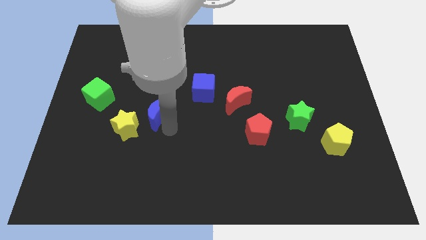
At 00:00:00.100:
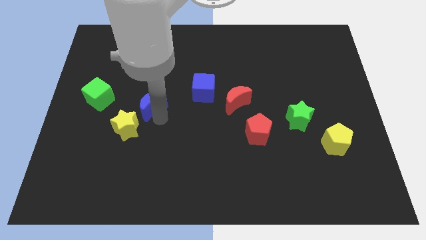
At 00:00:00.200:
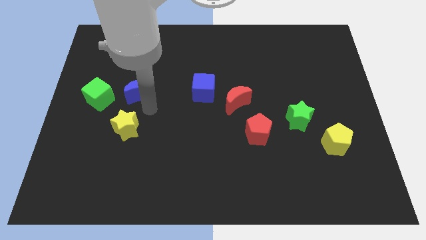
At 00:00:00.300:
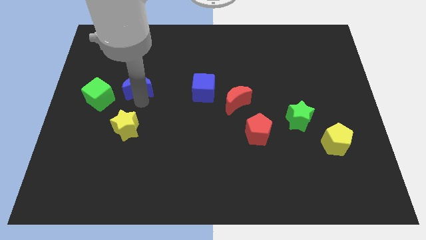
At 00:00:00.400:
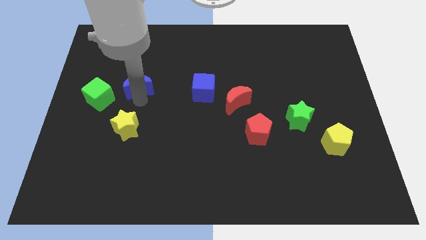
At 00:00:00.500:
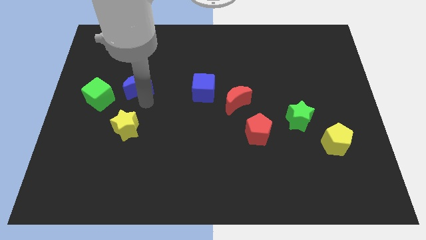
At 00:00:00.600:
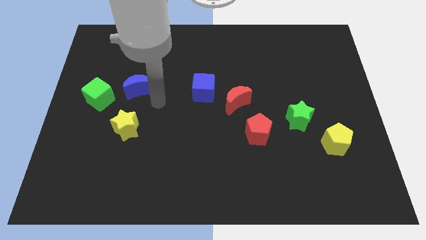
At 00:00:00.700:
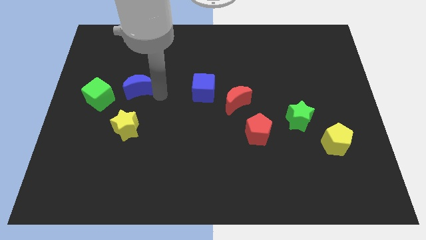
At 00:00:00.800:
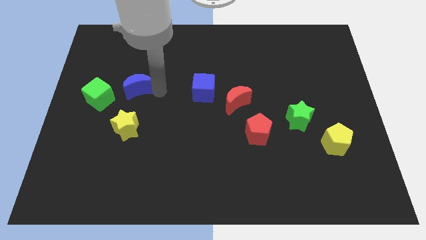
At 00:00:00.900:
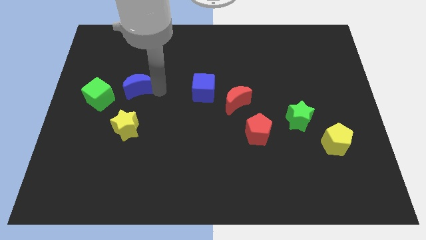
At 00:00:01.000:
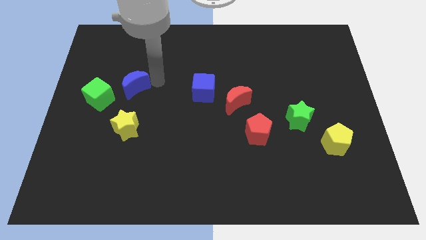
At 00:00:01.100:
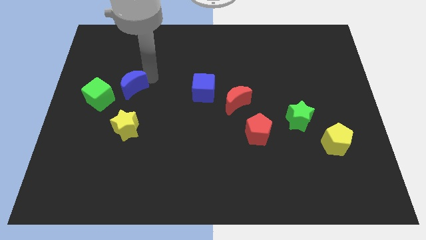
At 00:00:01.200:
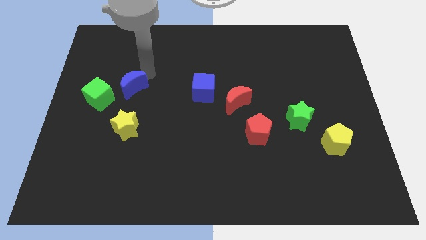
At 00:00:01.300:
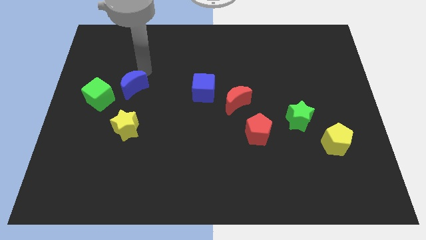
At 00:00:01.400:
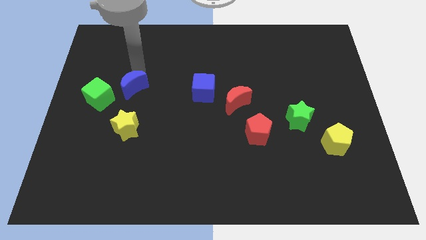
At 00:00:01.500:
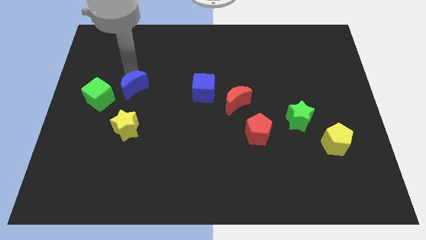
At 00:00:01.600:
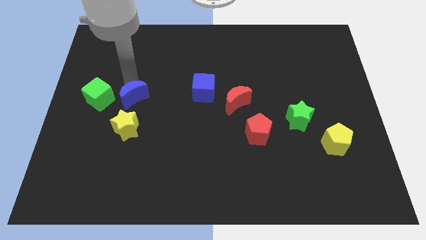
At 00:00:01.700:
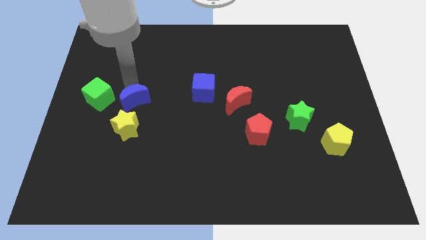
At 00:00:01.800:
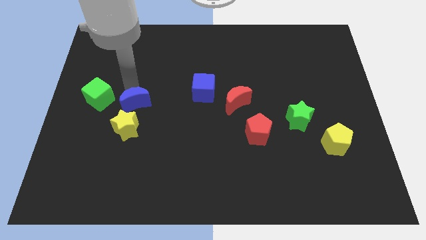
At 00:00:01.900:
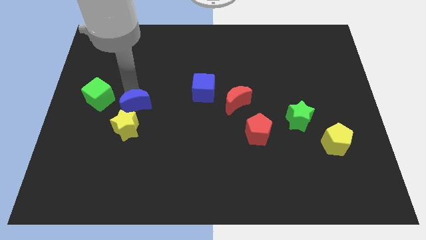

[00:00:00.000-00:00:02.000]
move the blue moon to top of the yellow star

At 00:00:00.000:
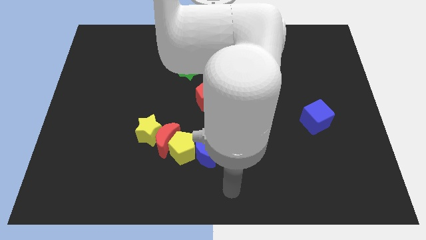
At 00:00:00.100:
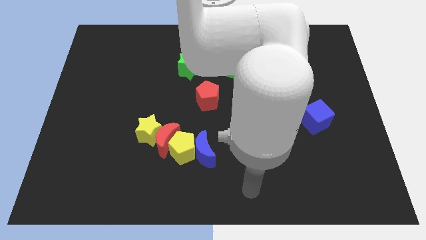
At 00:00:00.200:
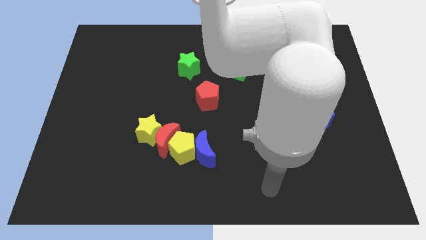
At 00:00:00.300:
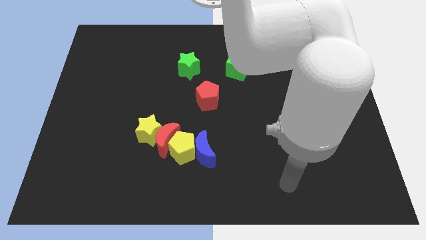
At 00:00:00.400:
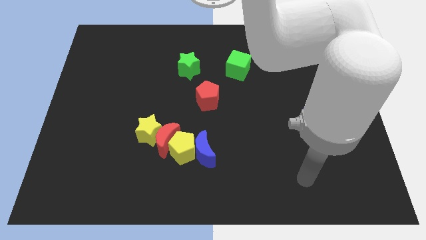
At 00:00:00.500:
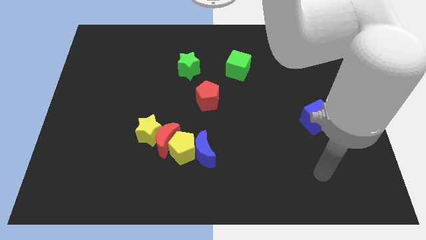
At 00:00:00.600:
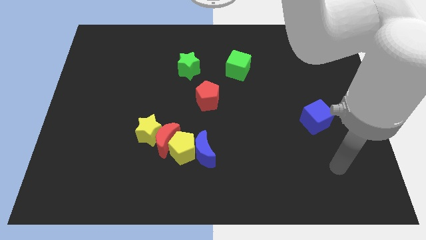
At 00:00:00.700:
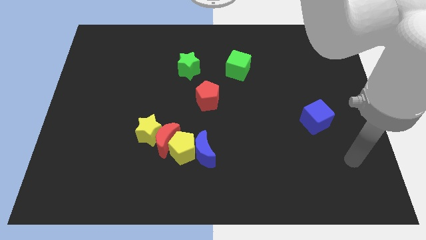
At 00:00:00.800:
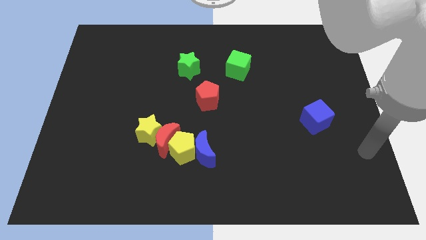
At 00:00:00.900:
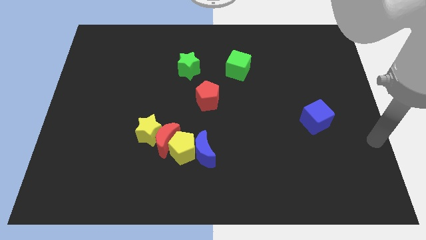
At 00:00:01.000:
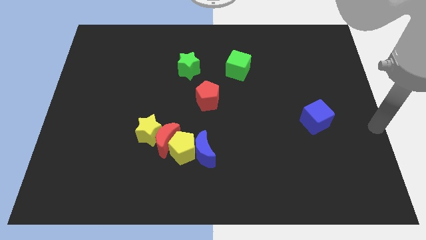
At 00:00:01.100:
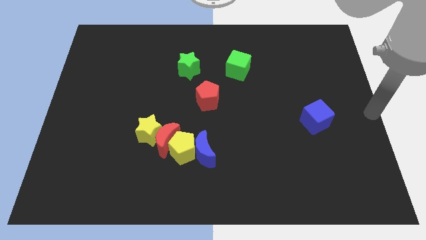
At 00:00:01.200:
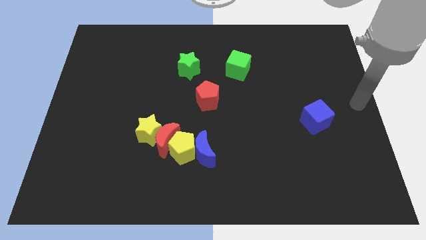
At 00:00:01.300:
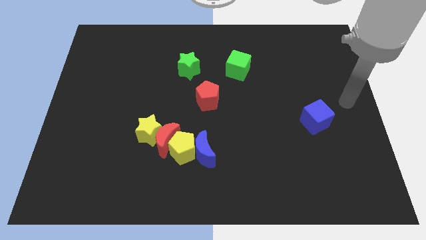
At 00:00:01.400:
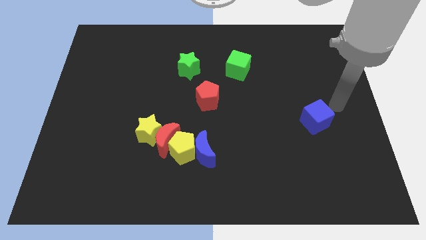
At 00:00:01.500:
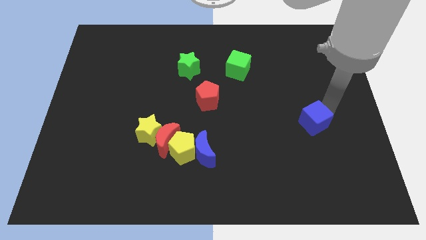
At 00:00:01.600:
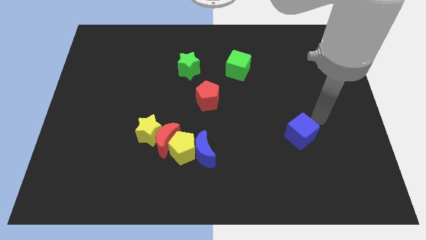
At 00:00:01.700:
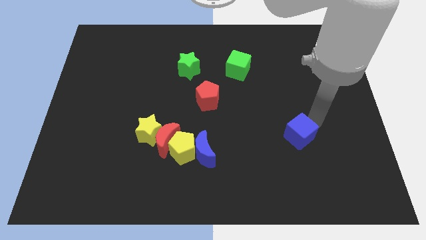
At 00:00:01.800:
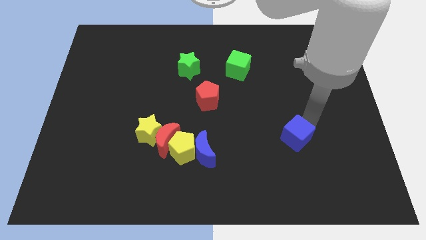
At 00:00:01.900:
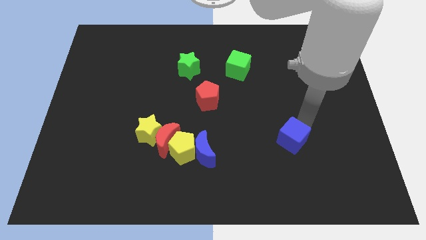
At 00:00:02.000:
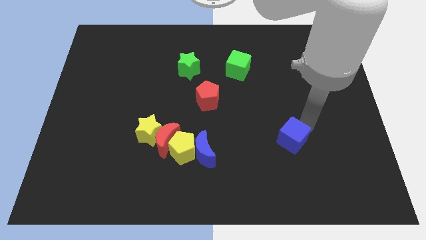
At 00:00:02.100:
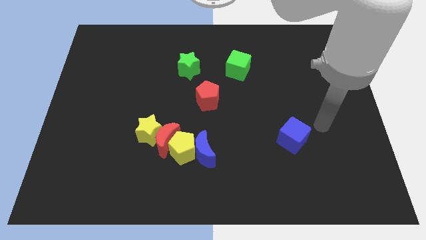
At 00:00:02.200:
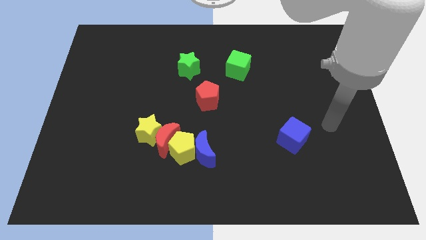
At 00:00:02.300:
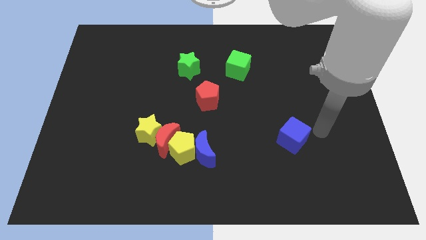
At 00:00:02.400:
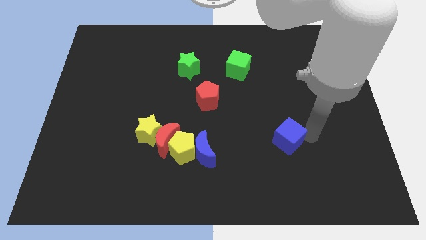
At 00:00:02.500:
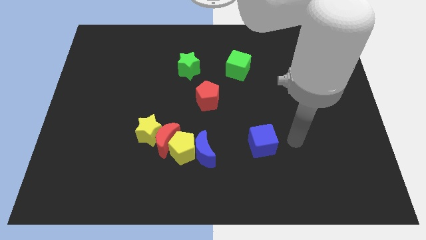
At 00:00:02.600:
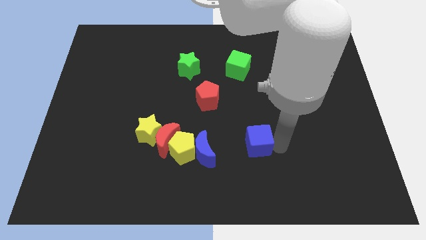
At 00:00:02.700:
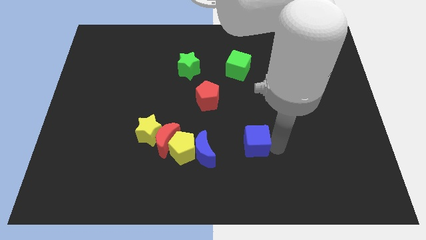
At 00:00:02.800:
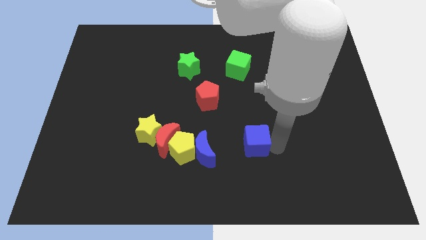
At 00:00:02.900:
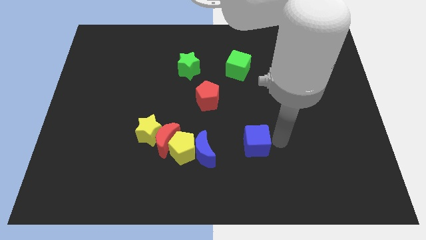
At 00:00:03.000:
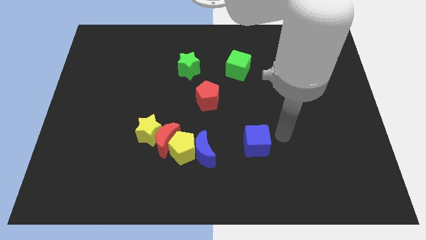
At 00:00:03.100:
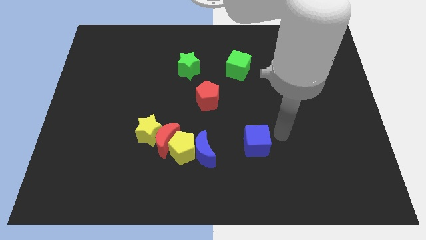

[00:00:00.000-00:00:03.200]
push the blue cube to the right of the blue crescent

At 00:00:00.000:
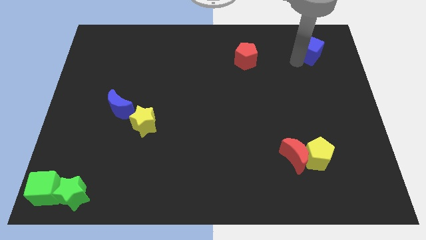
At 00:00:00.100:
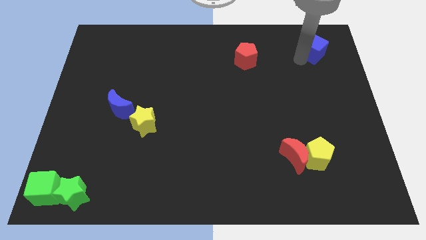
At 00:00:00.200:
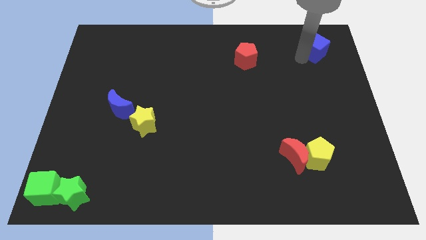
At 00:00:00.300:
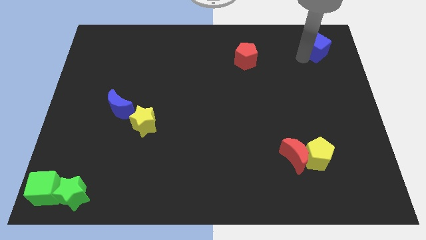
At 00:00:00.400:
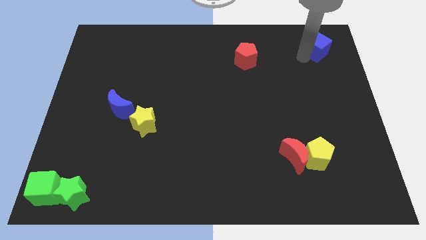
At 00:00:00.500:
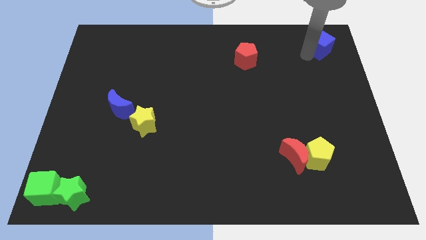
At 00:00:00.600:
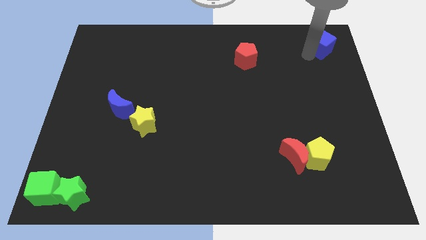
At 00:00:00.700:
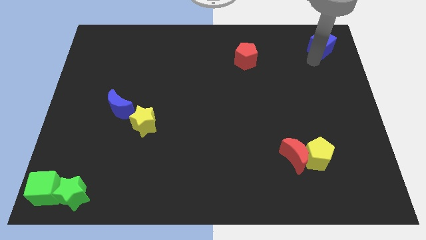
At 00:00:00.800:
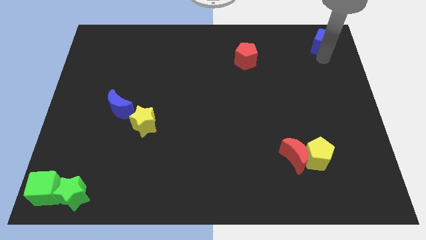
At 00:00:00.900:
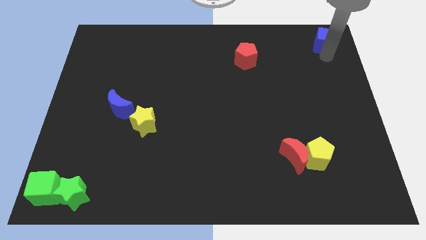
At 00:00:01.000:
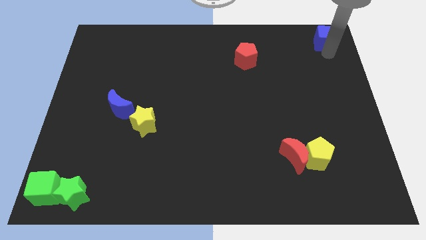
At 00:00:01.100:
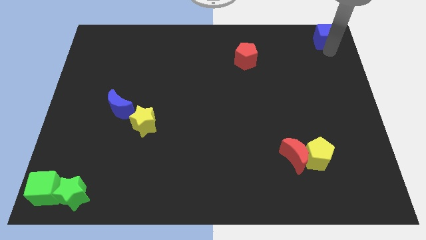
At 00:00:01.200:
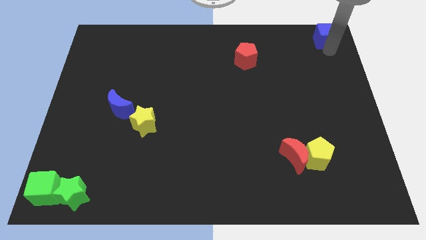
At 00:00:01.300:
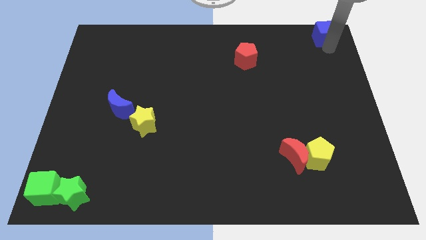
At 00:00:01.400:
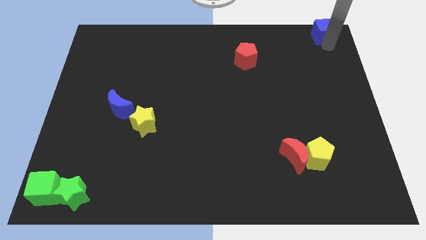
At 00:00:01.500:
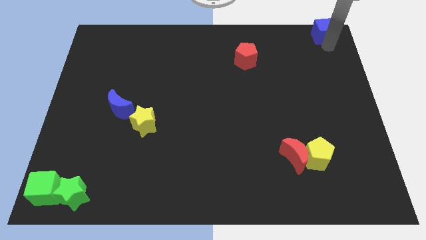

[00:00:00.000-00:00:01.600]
push the blue cube to the top right of the board

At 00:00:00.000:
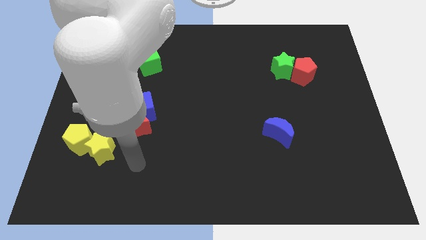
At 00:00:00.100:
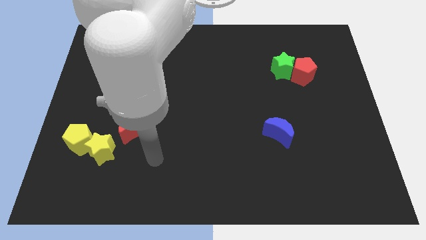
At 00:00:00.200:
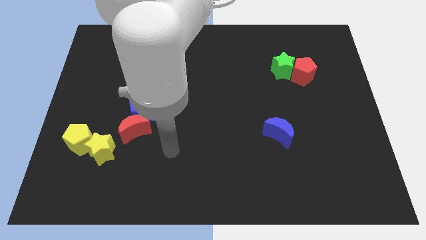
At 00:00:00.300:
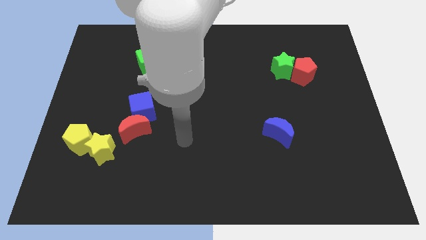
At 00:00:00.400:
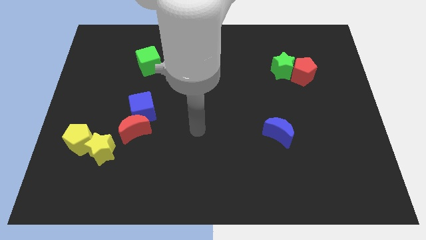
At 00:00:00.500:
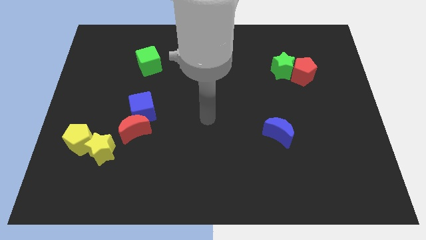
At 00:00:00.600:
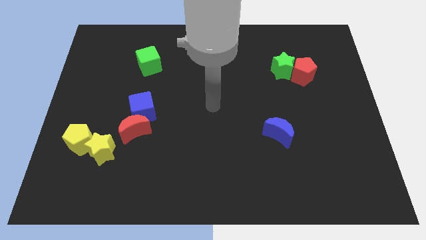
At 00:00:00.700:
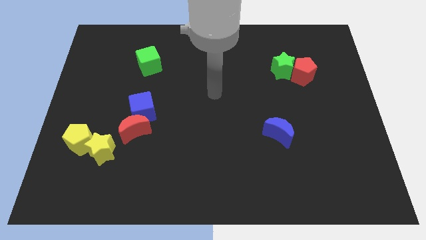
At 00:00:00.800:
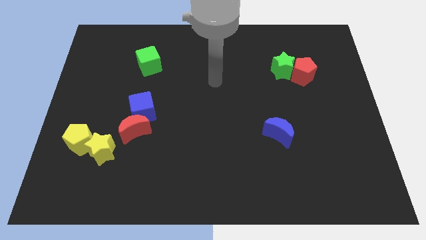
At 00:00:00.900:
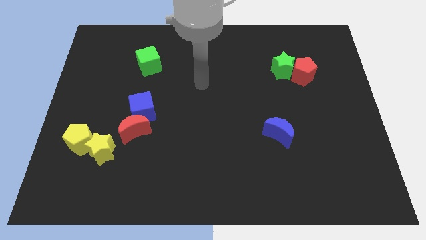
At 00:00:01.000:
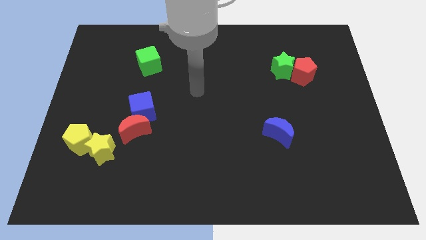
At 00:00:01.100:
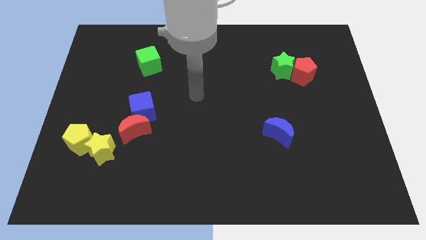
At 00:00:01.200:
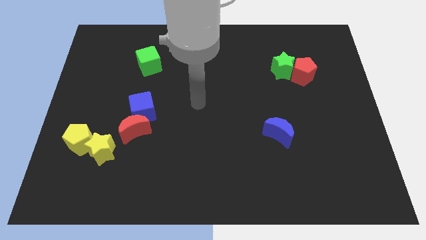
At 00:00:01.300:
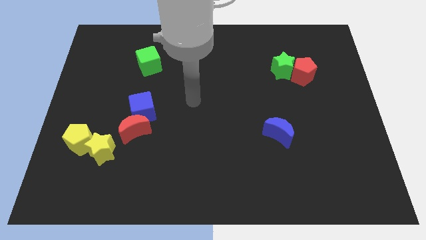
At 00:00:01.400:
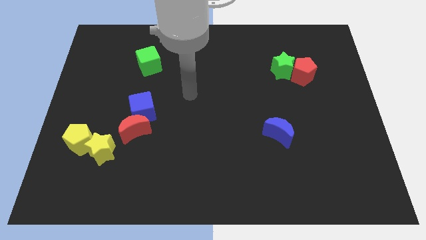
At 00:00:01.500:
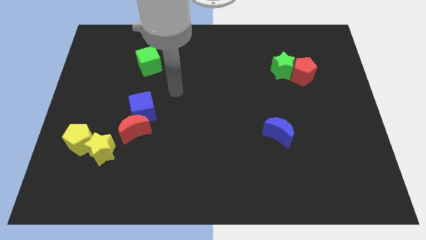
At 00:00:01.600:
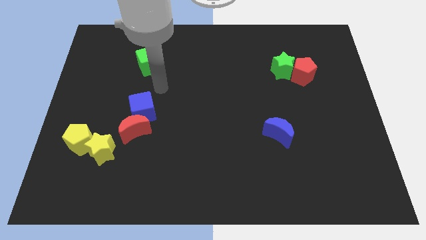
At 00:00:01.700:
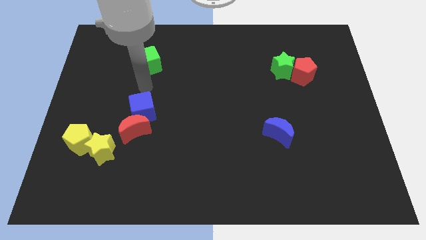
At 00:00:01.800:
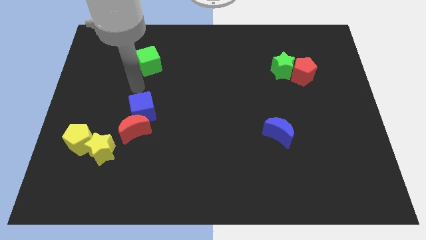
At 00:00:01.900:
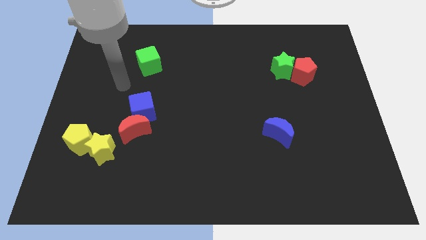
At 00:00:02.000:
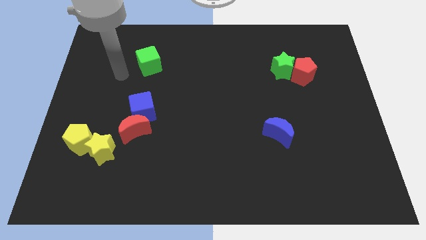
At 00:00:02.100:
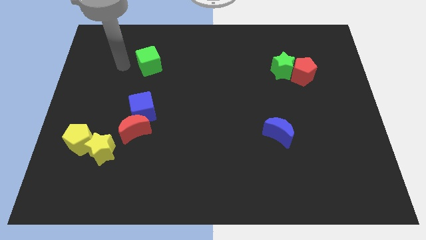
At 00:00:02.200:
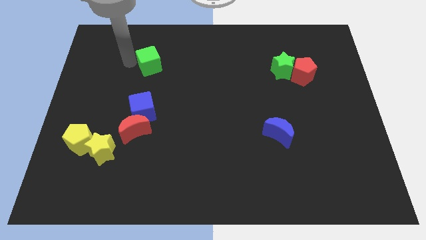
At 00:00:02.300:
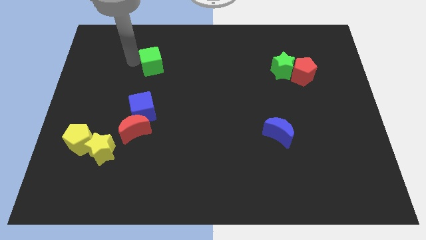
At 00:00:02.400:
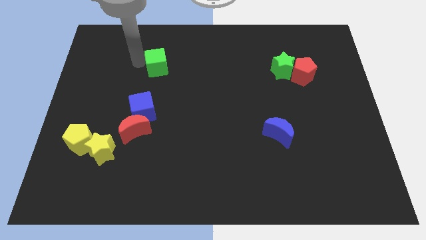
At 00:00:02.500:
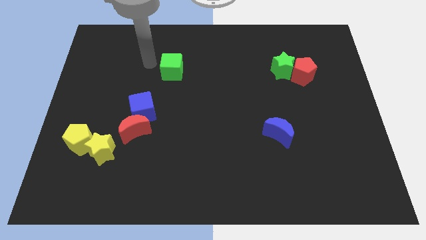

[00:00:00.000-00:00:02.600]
move the green cube to the top right of the blue cube
